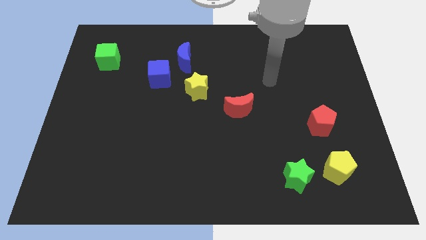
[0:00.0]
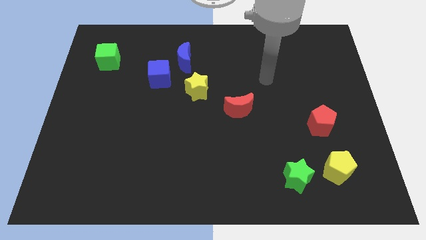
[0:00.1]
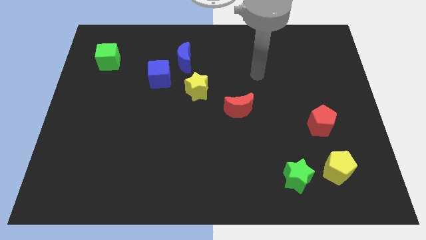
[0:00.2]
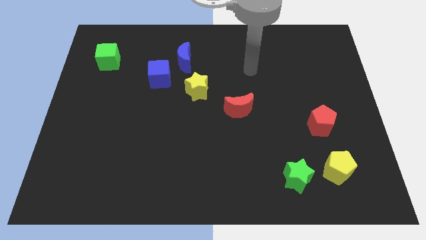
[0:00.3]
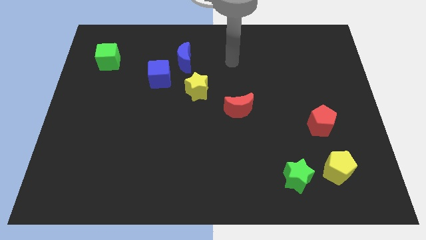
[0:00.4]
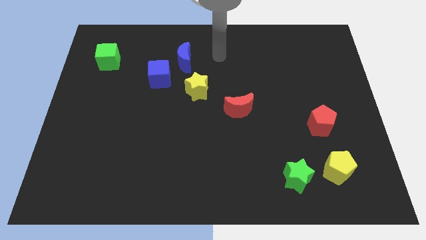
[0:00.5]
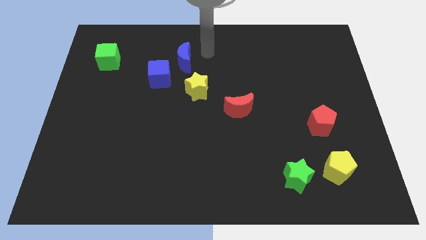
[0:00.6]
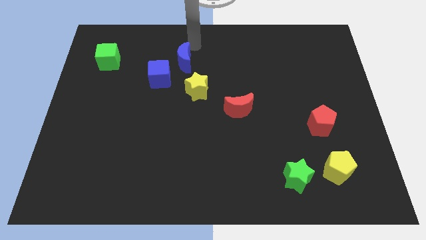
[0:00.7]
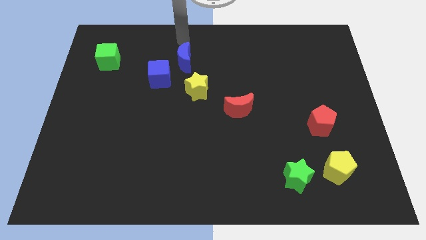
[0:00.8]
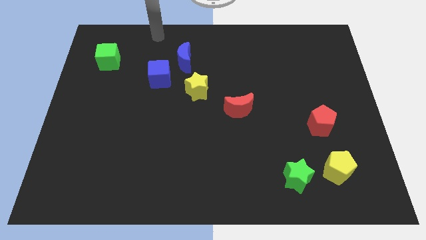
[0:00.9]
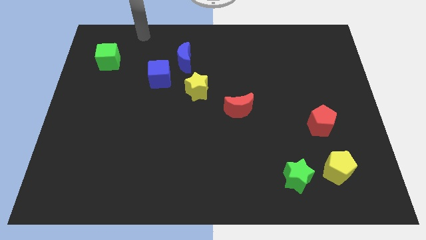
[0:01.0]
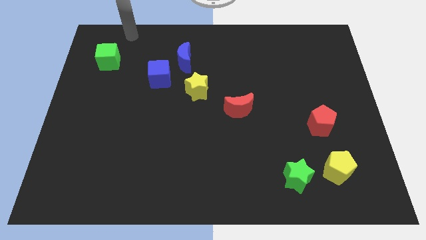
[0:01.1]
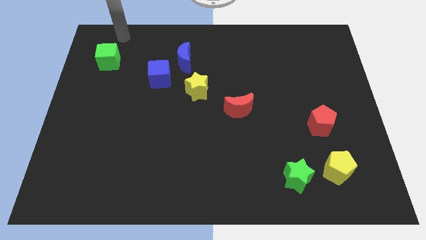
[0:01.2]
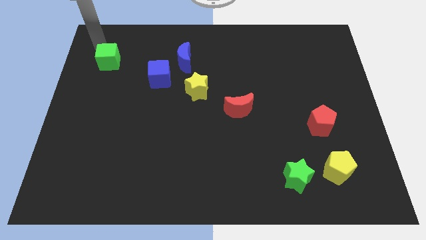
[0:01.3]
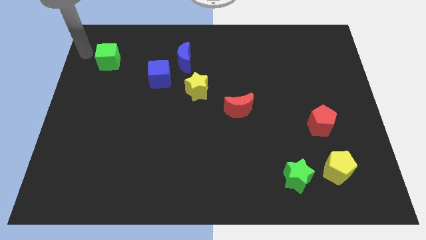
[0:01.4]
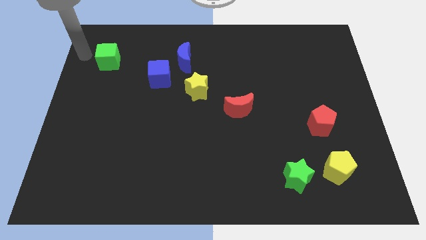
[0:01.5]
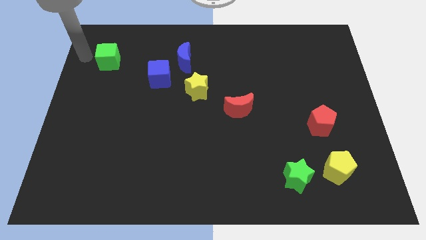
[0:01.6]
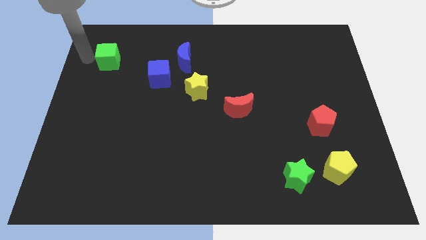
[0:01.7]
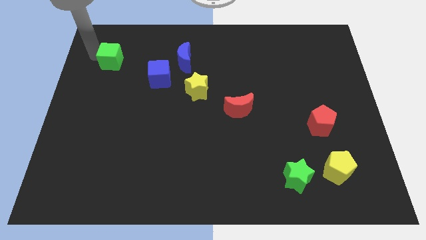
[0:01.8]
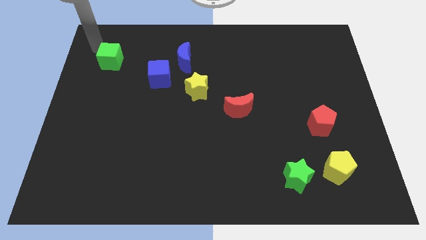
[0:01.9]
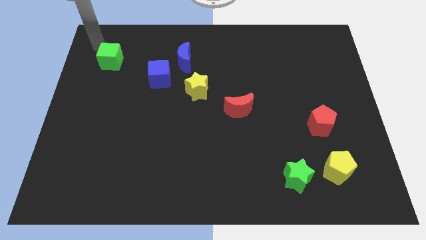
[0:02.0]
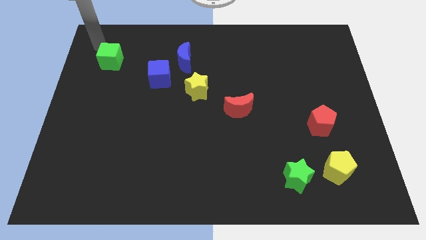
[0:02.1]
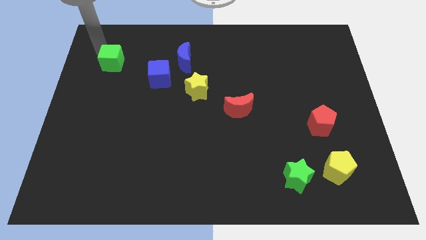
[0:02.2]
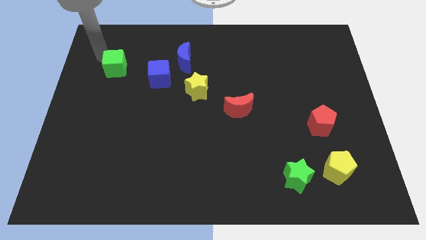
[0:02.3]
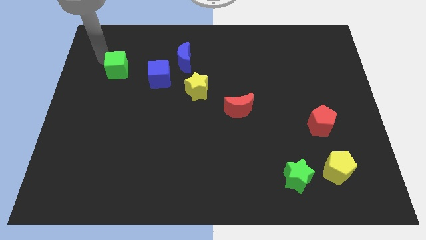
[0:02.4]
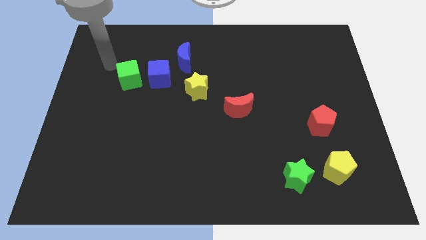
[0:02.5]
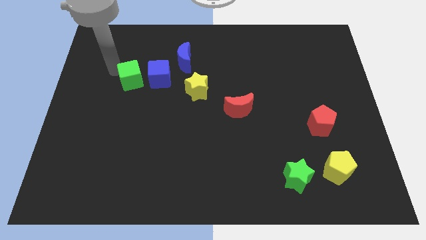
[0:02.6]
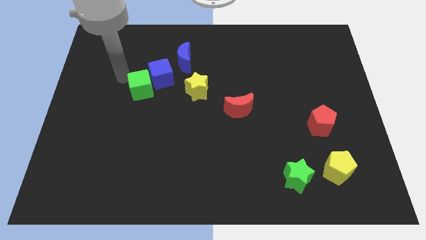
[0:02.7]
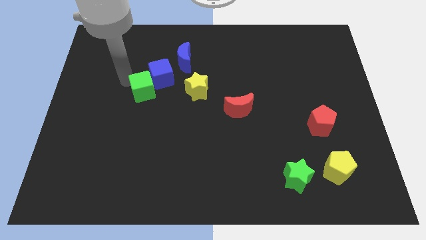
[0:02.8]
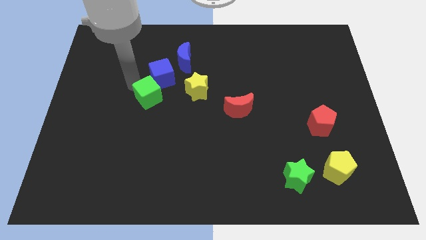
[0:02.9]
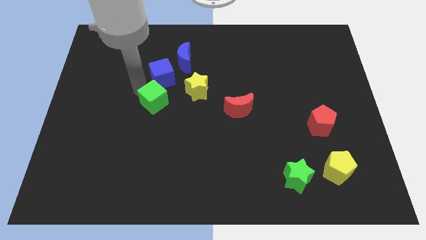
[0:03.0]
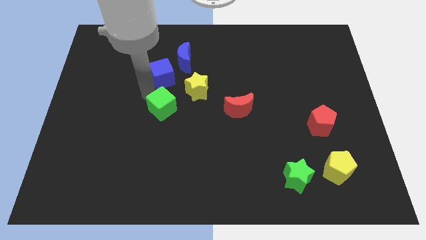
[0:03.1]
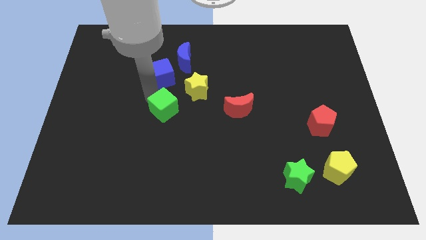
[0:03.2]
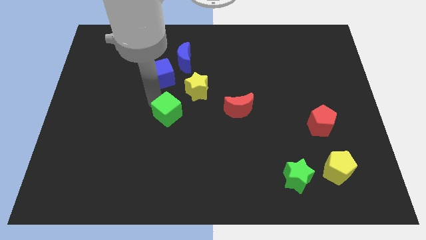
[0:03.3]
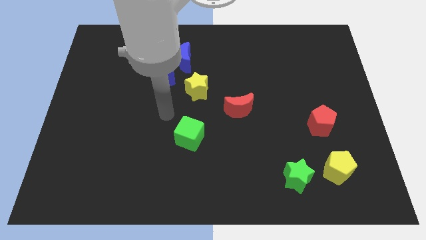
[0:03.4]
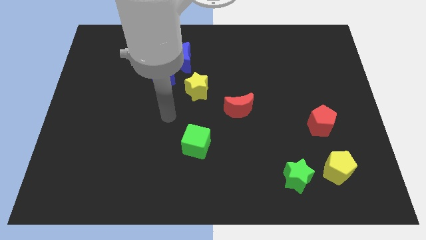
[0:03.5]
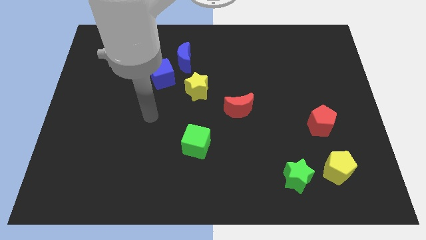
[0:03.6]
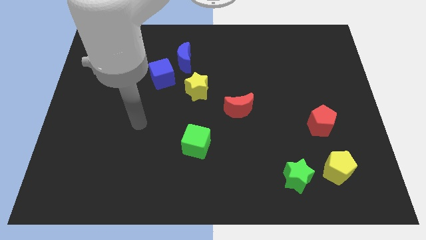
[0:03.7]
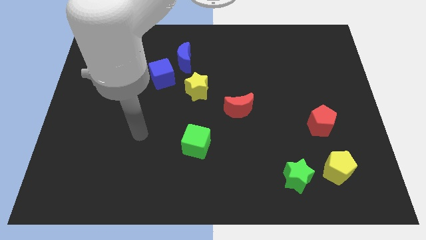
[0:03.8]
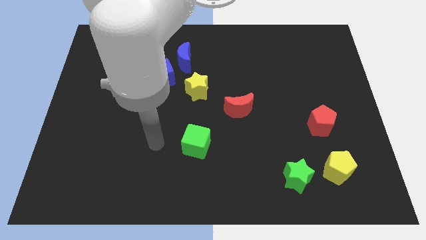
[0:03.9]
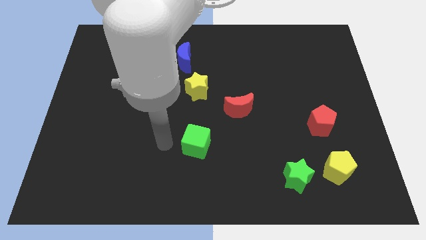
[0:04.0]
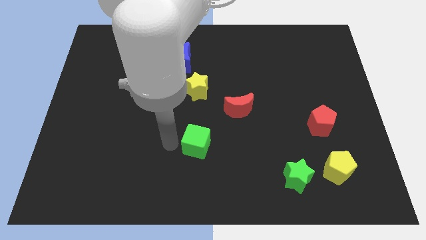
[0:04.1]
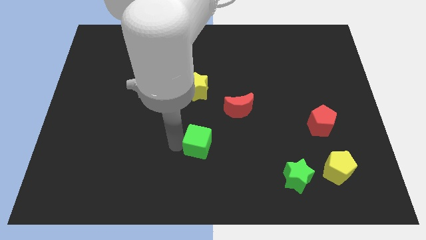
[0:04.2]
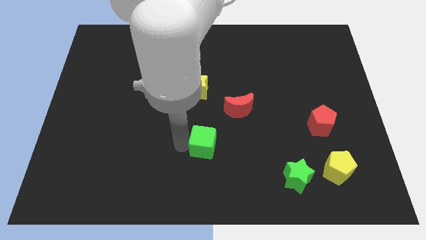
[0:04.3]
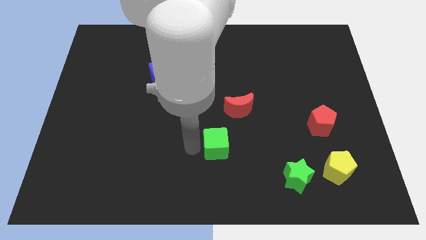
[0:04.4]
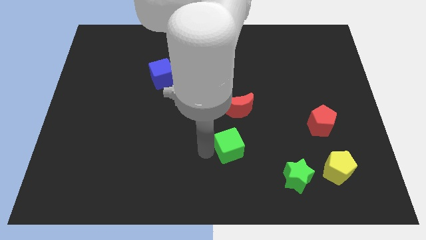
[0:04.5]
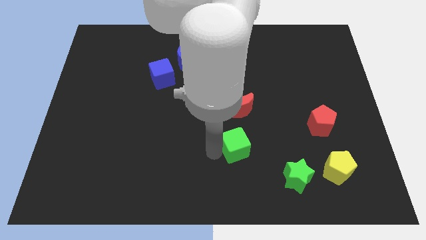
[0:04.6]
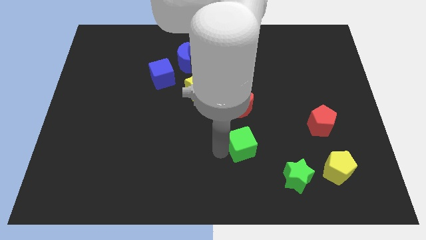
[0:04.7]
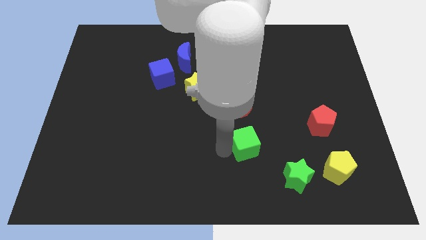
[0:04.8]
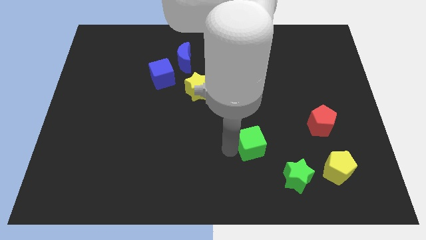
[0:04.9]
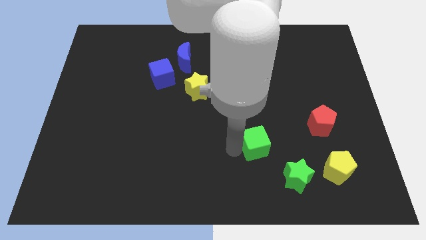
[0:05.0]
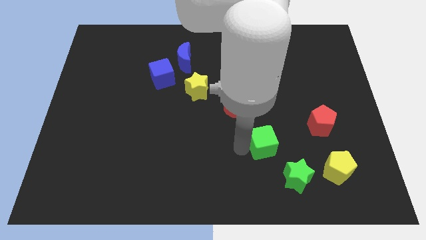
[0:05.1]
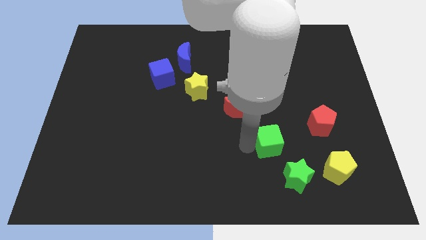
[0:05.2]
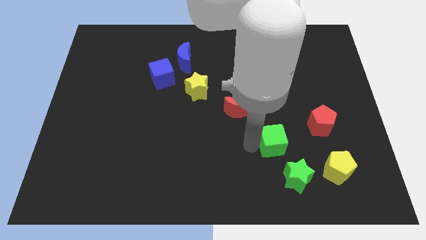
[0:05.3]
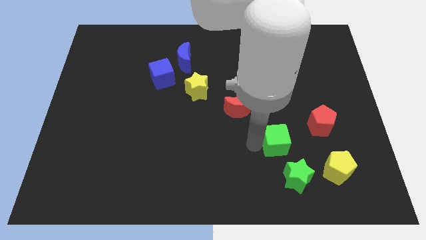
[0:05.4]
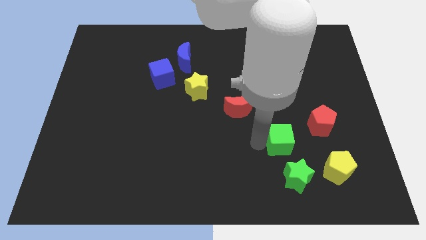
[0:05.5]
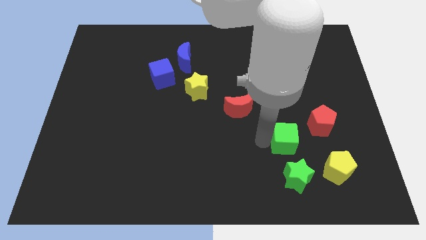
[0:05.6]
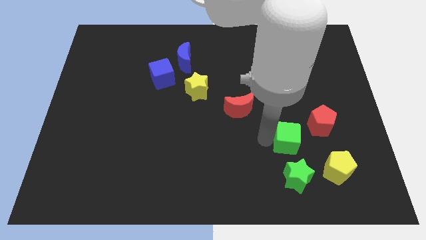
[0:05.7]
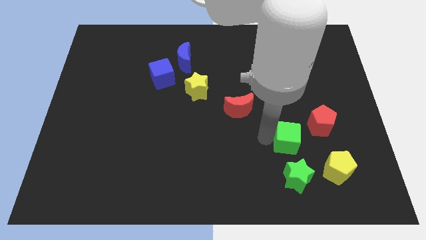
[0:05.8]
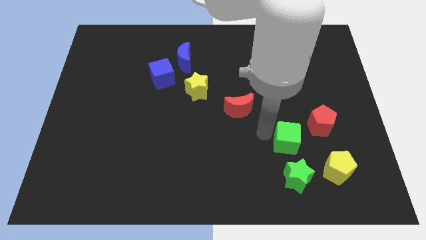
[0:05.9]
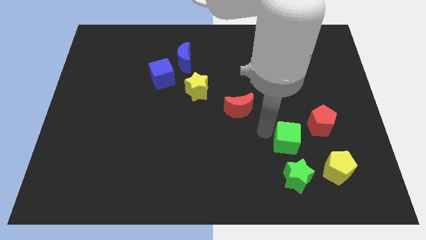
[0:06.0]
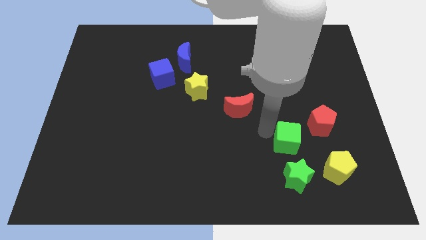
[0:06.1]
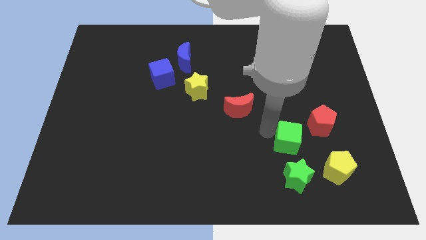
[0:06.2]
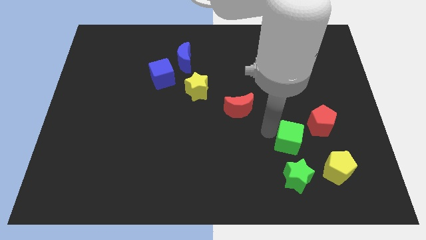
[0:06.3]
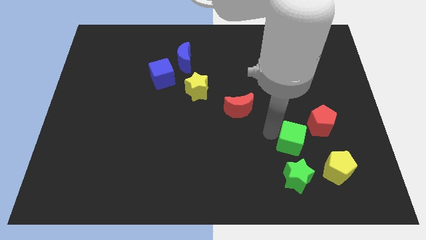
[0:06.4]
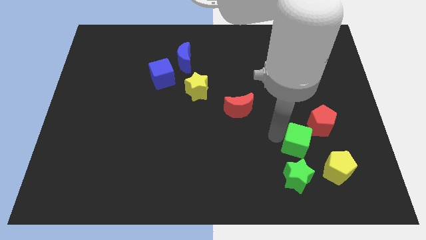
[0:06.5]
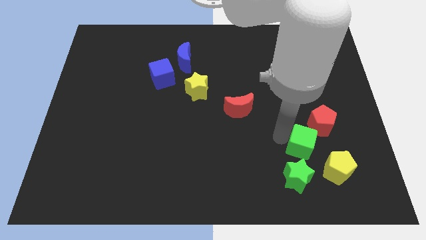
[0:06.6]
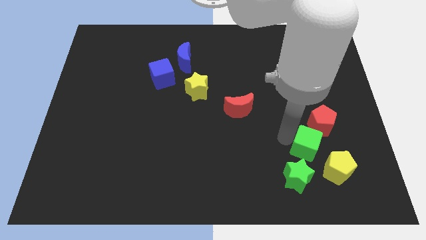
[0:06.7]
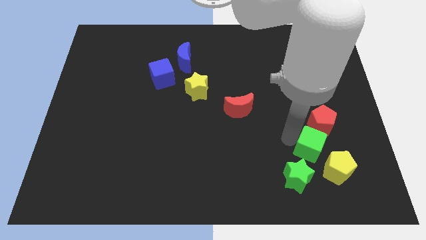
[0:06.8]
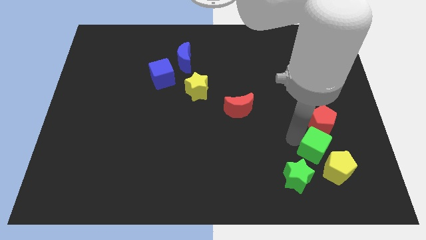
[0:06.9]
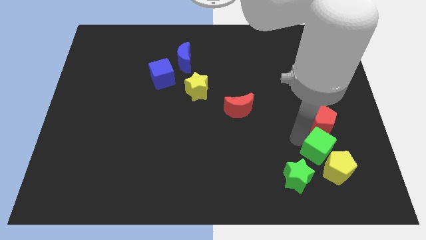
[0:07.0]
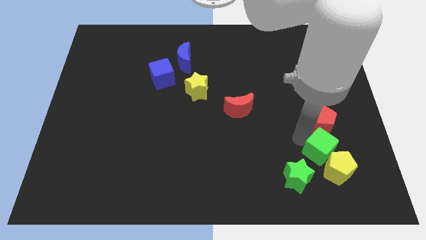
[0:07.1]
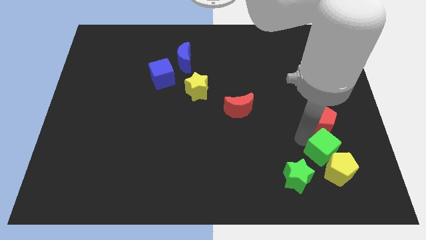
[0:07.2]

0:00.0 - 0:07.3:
slide the green cube next to the yellow pentagon

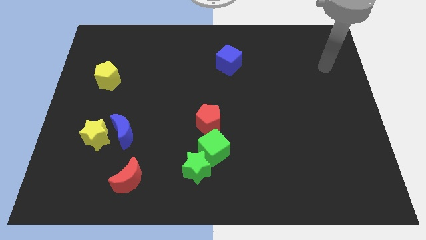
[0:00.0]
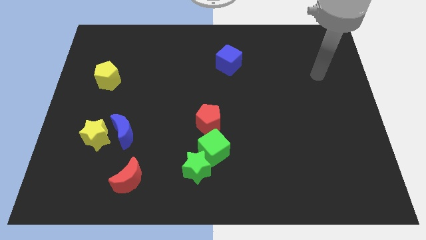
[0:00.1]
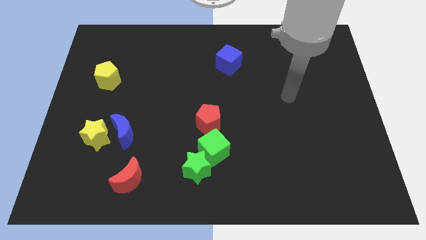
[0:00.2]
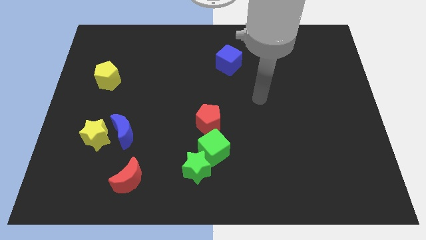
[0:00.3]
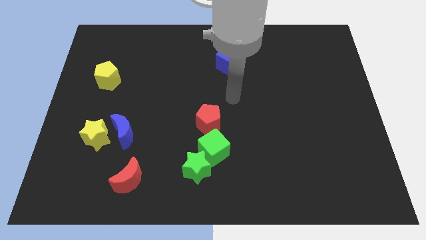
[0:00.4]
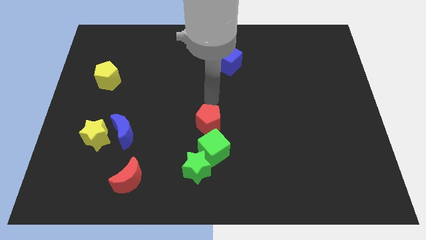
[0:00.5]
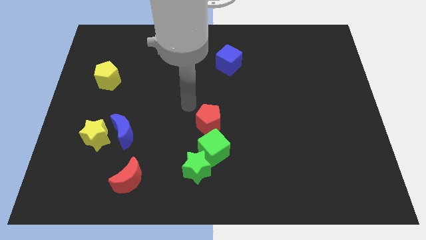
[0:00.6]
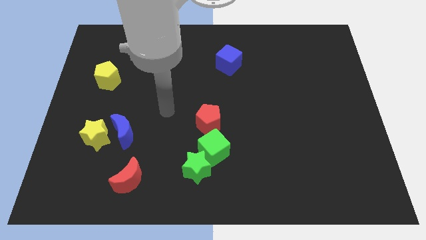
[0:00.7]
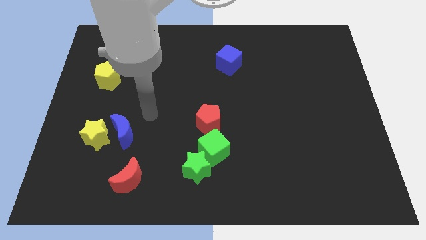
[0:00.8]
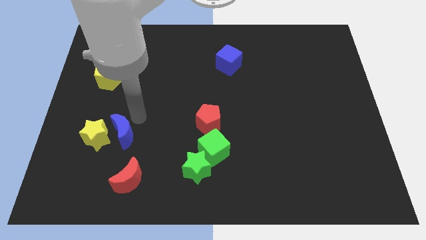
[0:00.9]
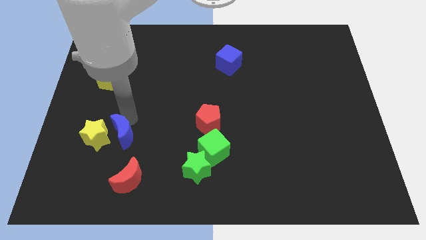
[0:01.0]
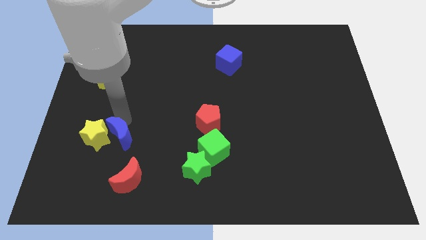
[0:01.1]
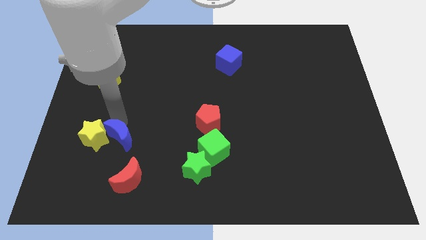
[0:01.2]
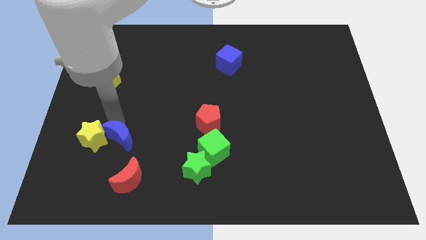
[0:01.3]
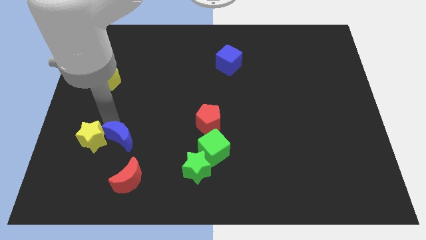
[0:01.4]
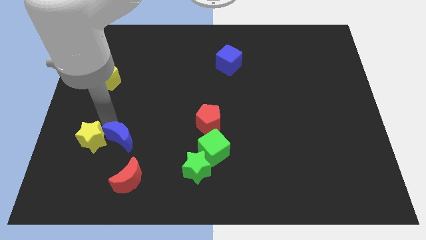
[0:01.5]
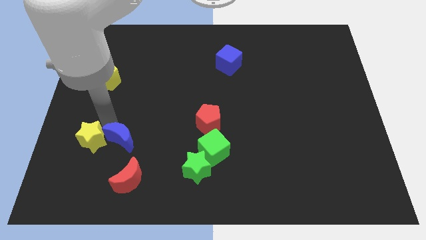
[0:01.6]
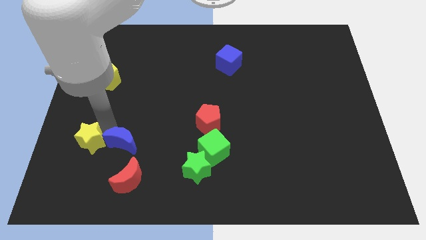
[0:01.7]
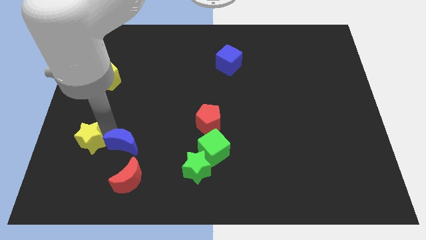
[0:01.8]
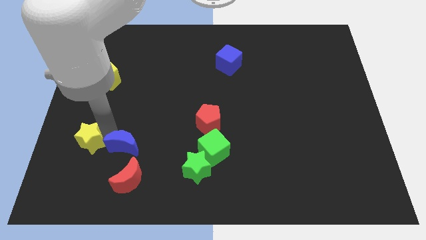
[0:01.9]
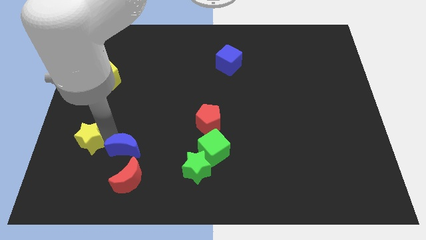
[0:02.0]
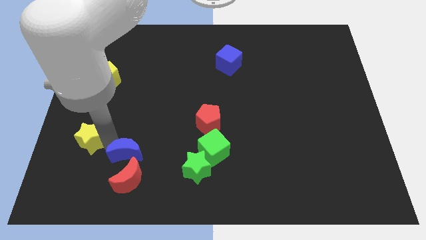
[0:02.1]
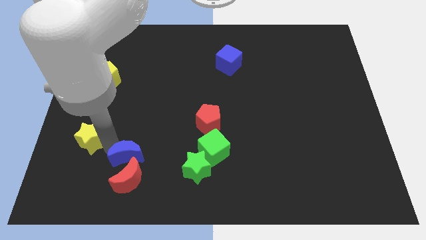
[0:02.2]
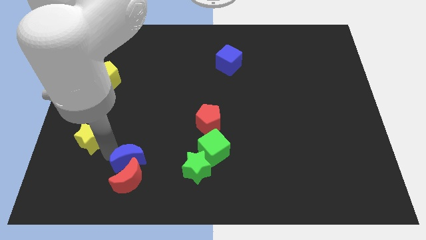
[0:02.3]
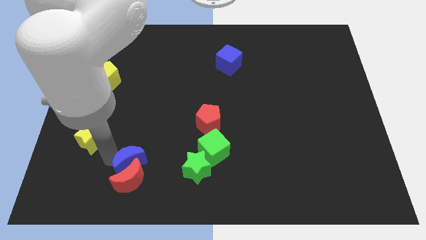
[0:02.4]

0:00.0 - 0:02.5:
push the blue moon to the red moon
